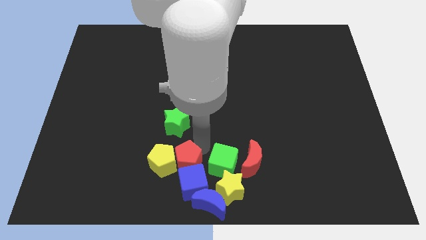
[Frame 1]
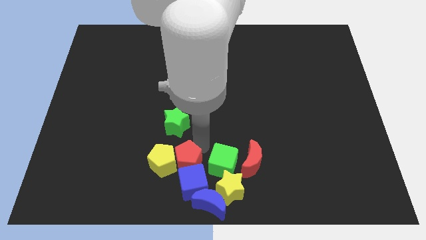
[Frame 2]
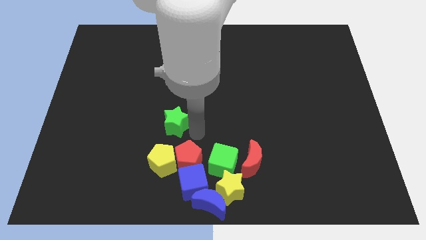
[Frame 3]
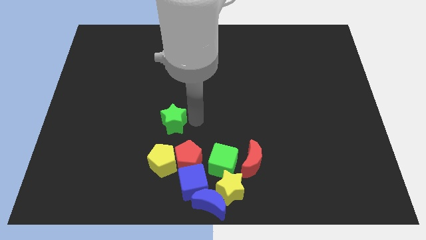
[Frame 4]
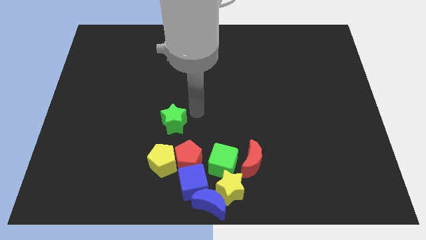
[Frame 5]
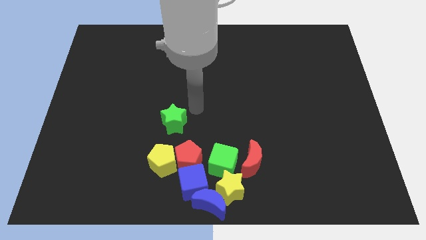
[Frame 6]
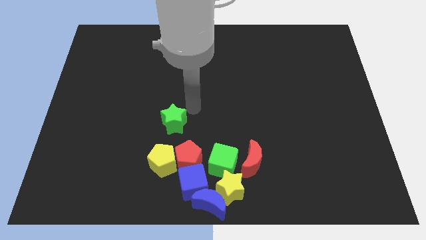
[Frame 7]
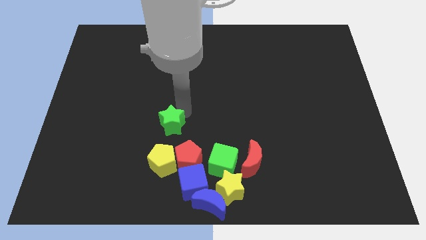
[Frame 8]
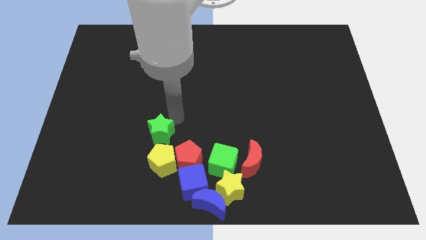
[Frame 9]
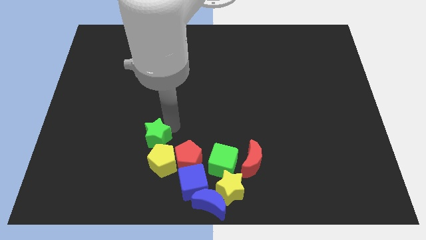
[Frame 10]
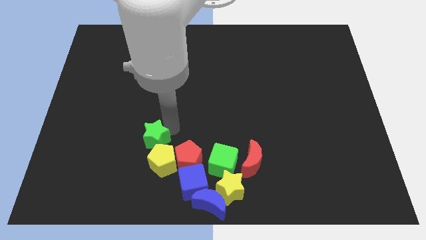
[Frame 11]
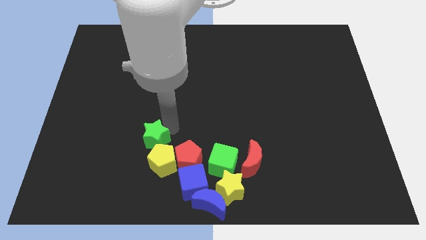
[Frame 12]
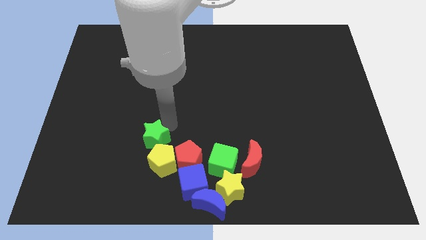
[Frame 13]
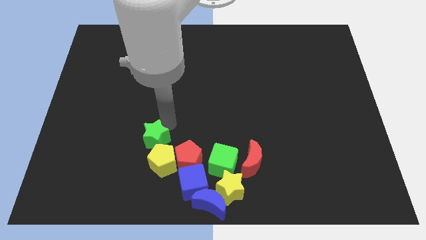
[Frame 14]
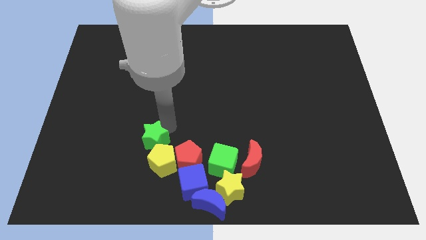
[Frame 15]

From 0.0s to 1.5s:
move the green star into the yellow pentagon

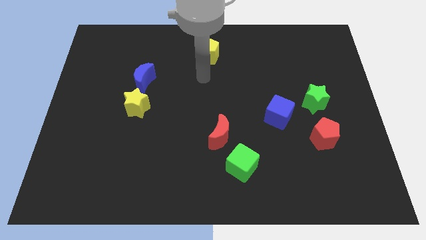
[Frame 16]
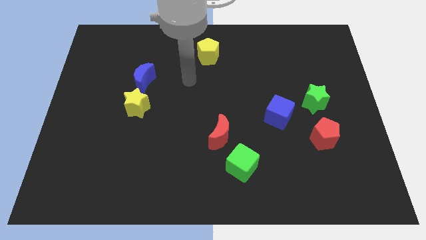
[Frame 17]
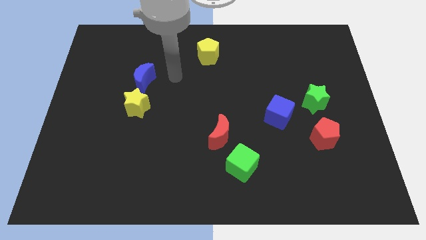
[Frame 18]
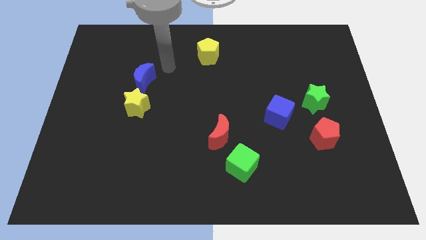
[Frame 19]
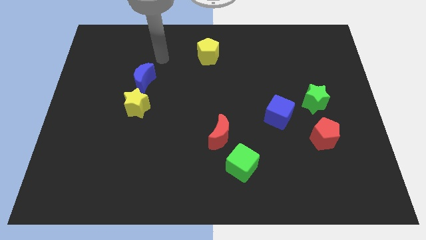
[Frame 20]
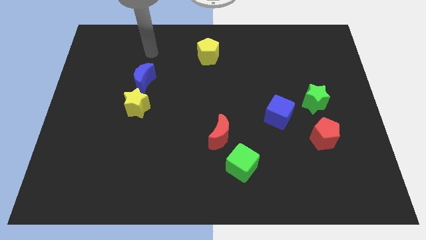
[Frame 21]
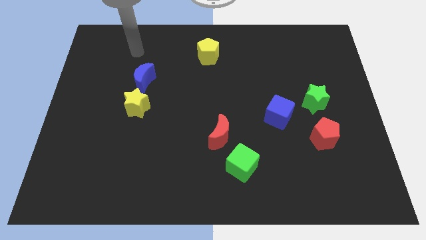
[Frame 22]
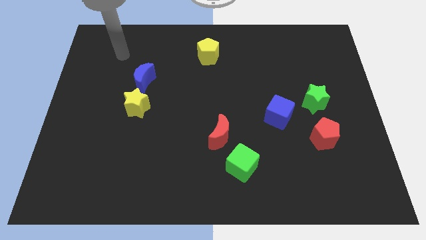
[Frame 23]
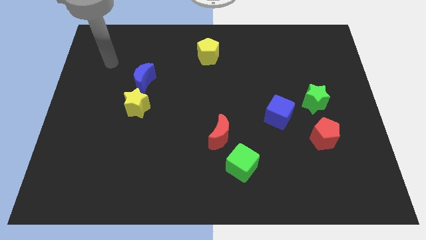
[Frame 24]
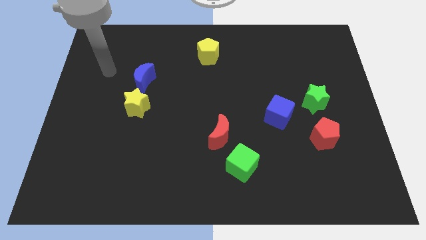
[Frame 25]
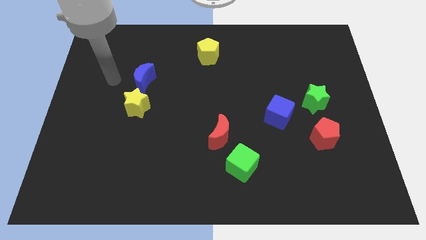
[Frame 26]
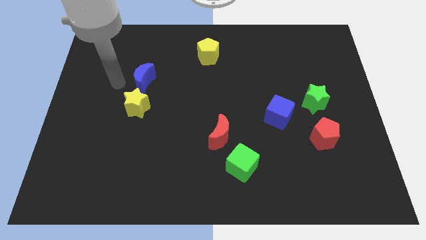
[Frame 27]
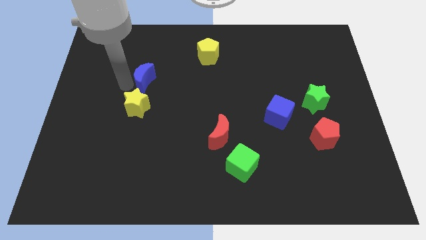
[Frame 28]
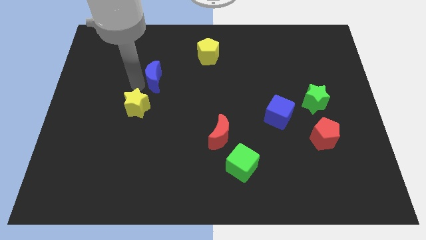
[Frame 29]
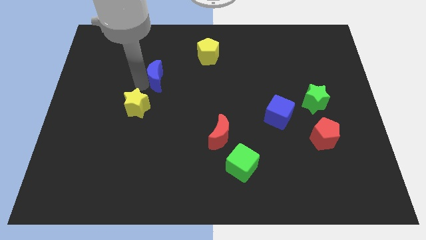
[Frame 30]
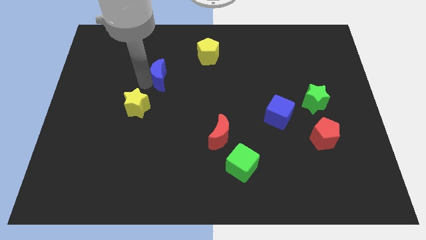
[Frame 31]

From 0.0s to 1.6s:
push the blue moon slightly to the right

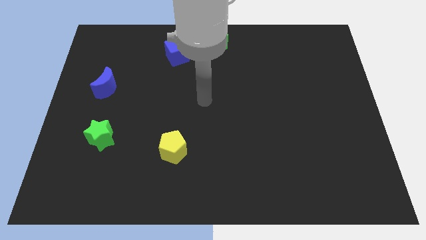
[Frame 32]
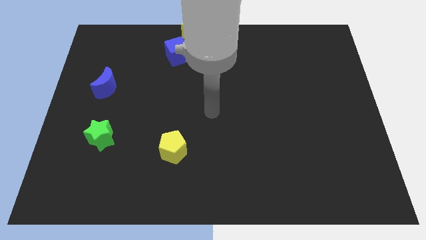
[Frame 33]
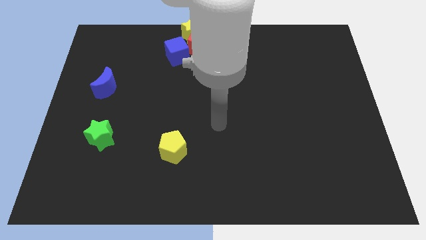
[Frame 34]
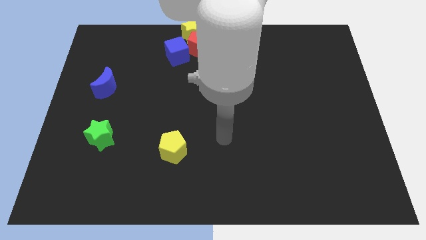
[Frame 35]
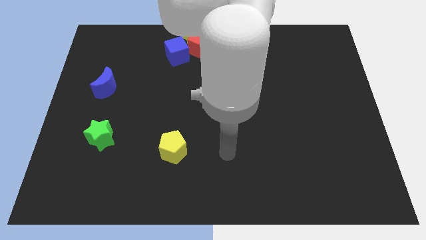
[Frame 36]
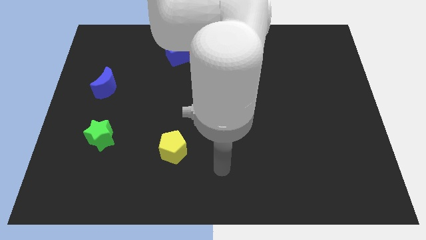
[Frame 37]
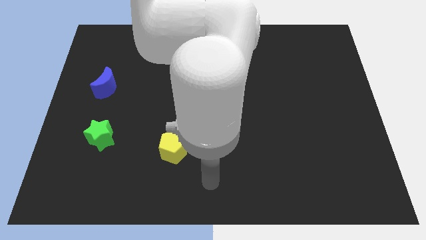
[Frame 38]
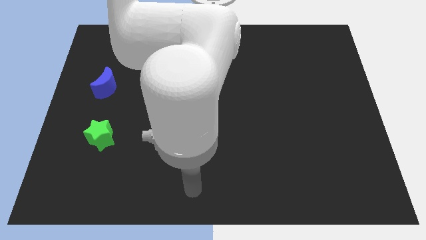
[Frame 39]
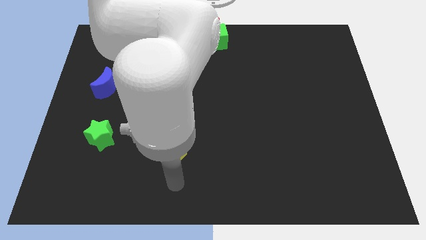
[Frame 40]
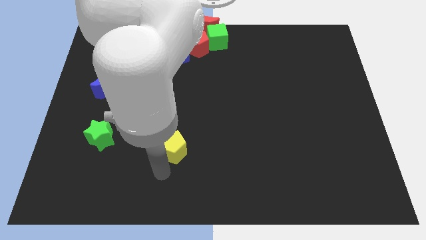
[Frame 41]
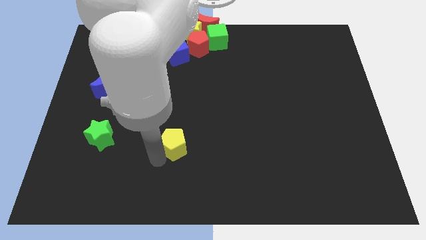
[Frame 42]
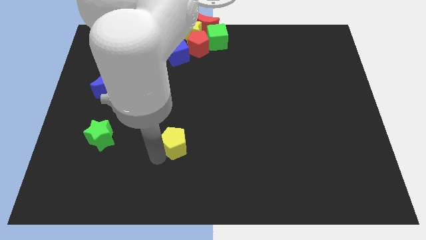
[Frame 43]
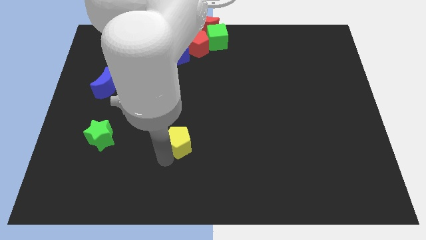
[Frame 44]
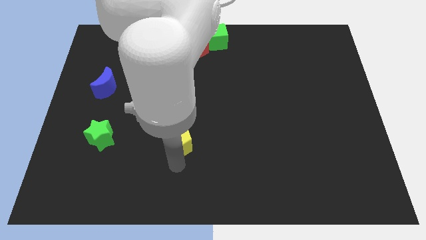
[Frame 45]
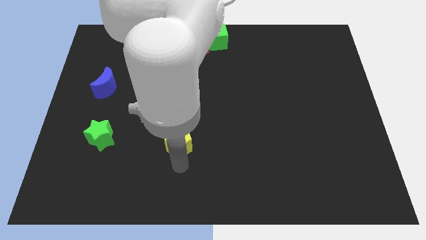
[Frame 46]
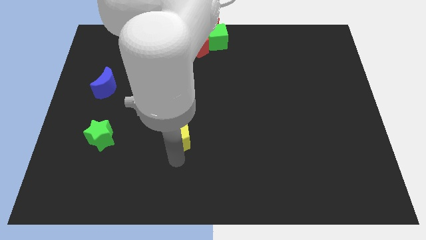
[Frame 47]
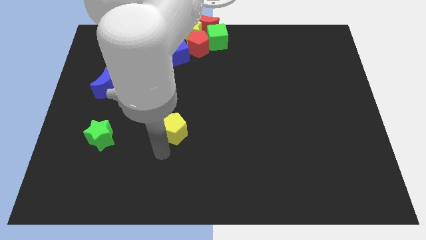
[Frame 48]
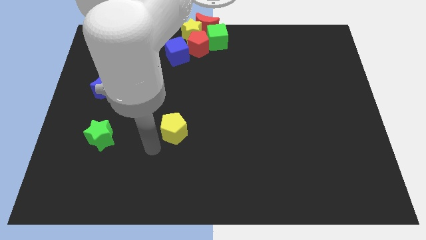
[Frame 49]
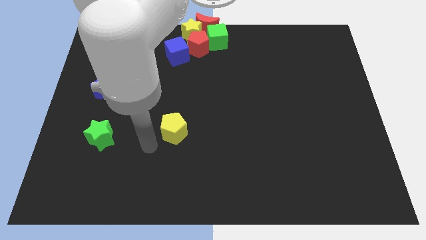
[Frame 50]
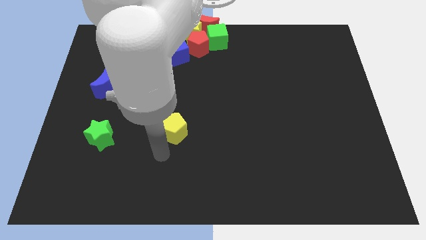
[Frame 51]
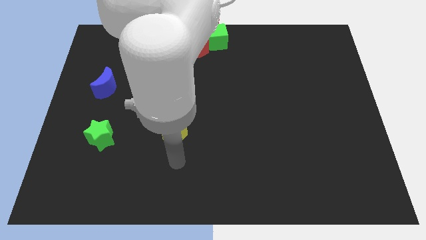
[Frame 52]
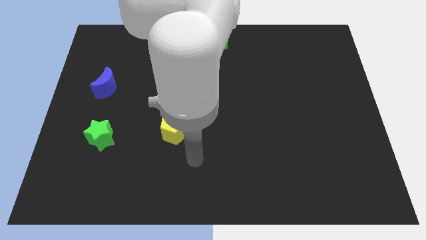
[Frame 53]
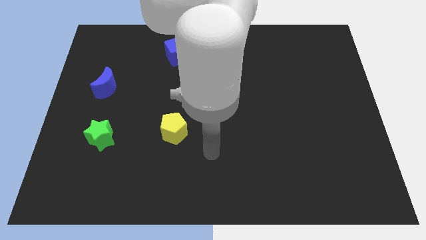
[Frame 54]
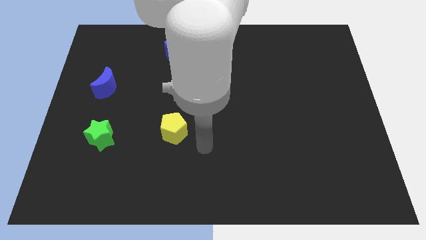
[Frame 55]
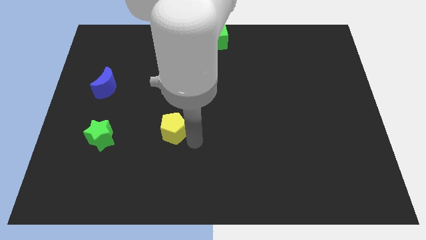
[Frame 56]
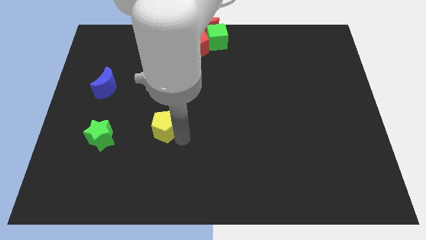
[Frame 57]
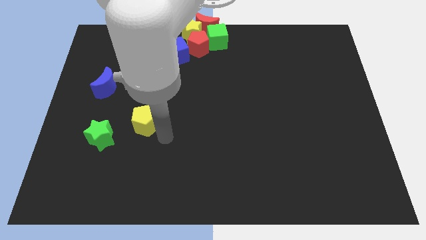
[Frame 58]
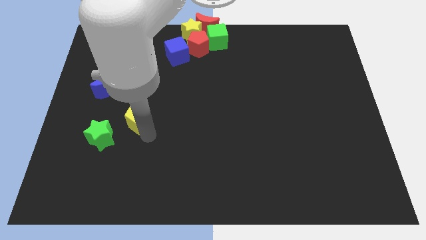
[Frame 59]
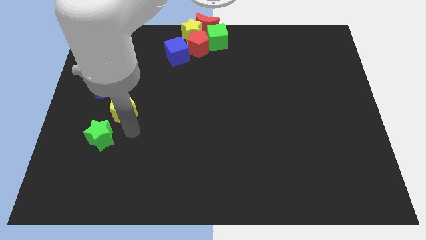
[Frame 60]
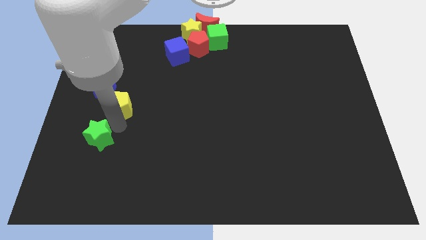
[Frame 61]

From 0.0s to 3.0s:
move yellow pentagon towards blue crescent

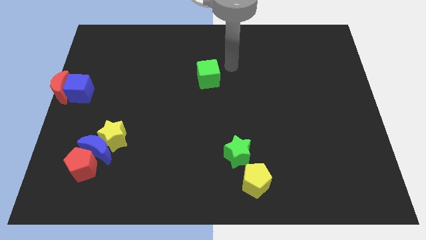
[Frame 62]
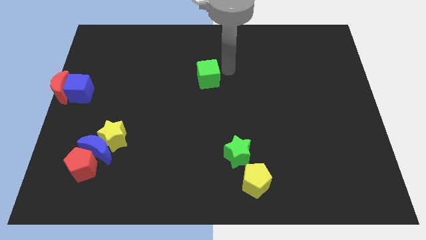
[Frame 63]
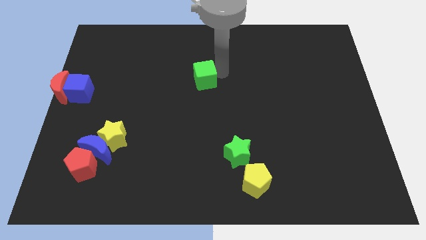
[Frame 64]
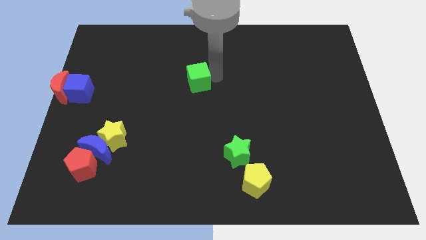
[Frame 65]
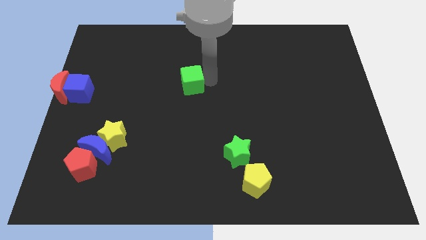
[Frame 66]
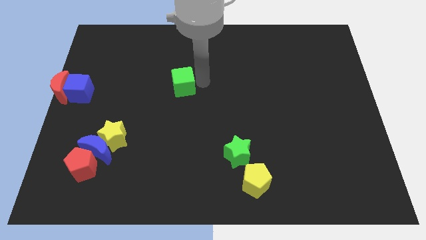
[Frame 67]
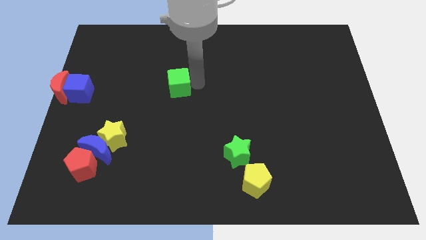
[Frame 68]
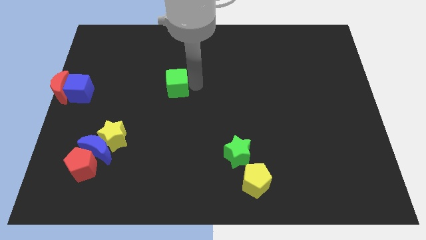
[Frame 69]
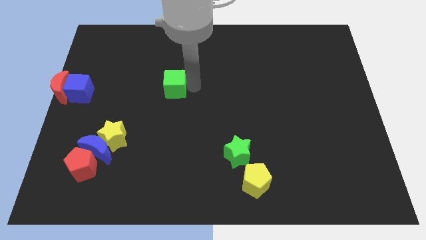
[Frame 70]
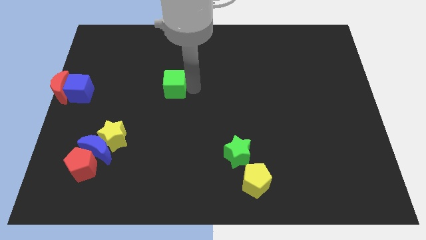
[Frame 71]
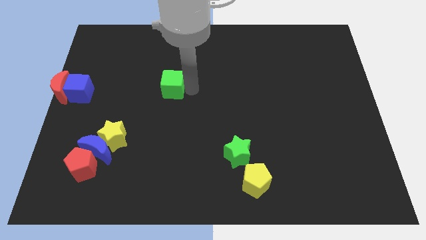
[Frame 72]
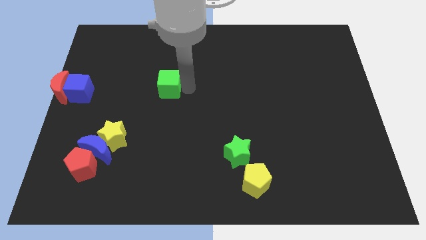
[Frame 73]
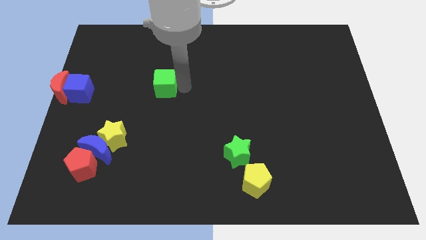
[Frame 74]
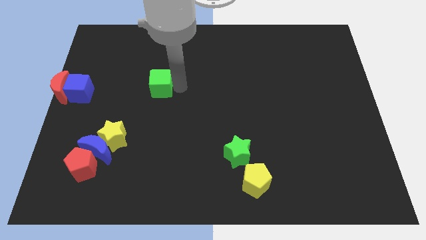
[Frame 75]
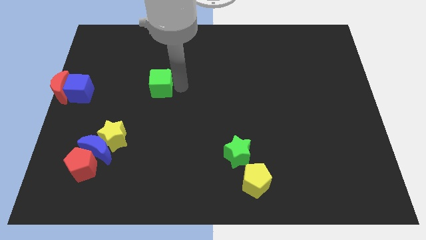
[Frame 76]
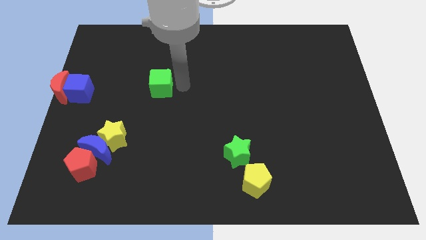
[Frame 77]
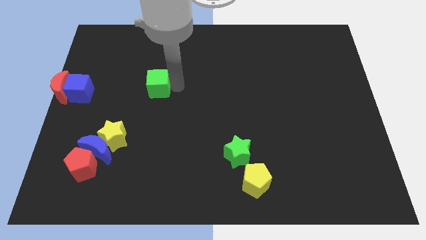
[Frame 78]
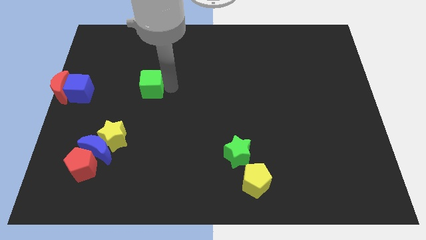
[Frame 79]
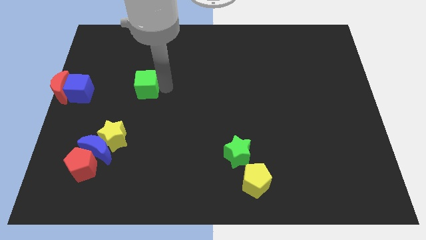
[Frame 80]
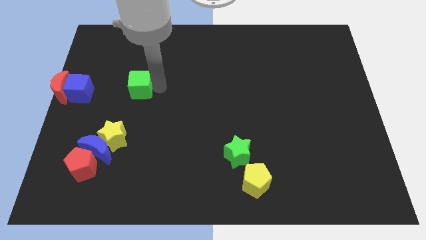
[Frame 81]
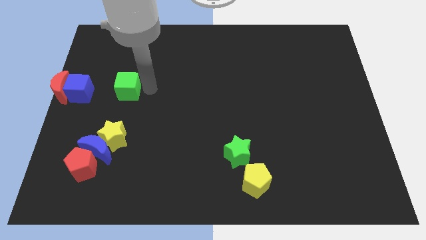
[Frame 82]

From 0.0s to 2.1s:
push green cube above yellow star

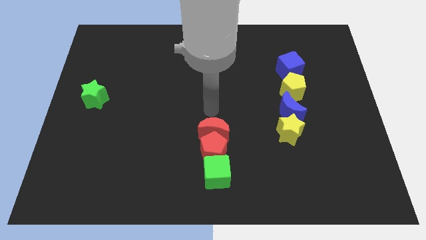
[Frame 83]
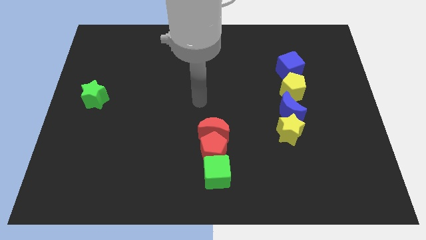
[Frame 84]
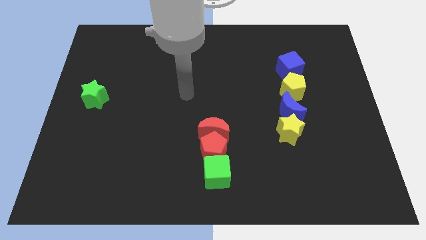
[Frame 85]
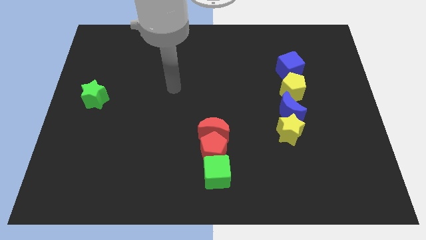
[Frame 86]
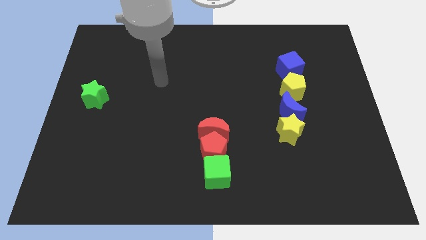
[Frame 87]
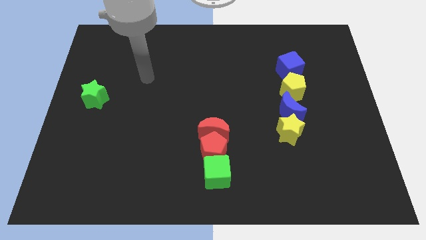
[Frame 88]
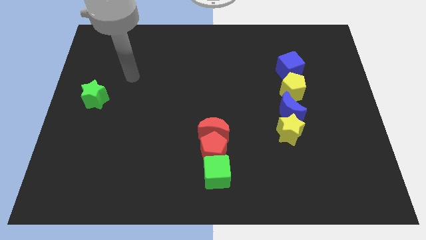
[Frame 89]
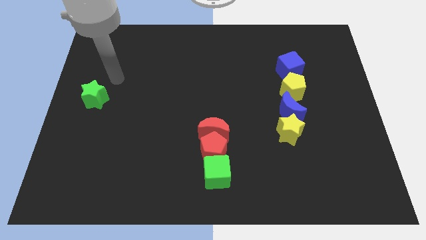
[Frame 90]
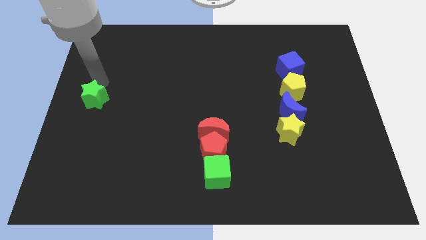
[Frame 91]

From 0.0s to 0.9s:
place your arm to the top of green star
